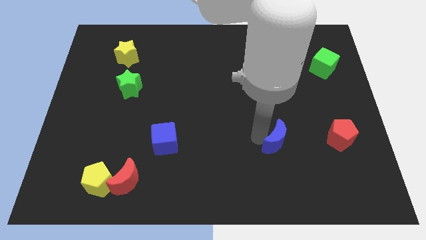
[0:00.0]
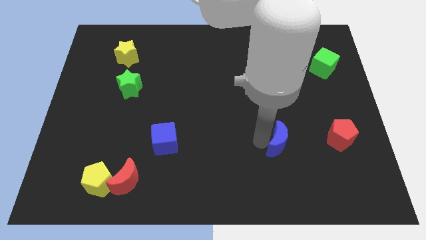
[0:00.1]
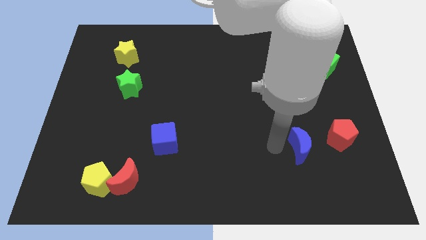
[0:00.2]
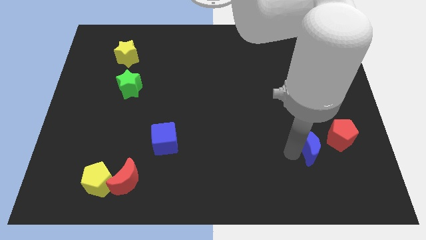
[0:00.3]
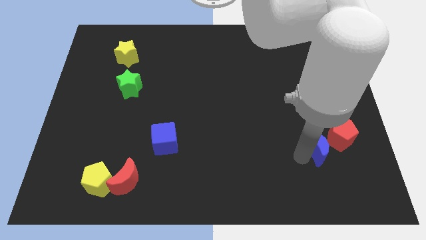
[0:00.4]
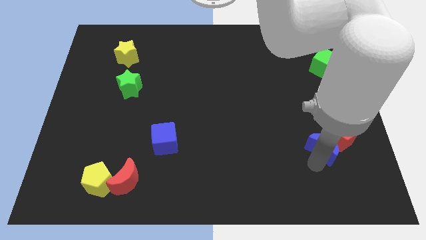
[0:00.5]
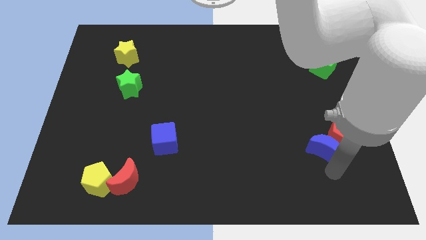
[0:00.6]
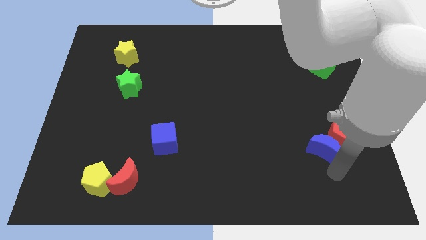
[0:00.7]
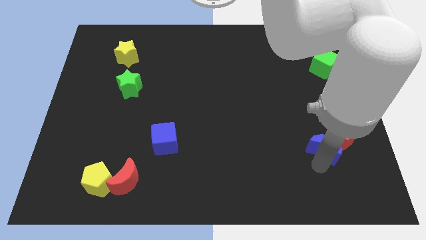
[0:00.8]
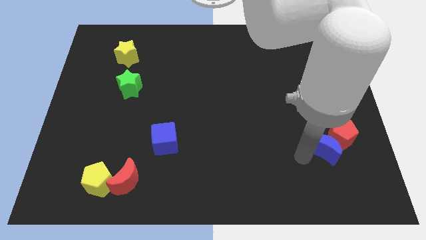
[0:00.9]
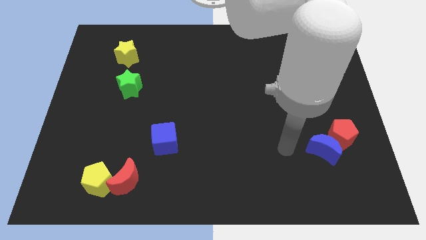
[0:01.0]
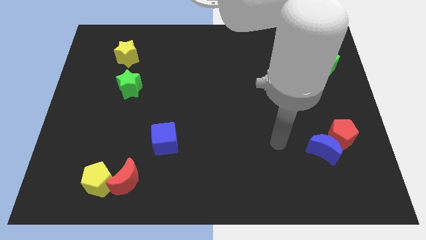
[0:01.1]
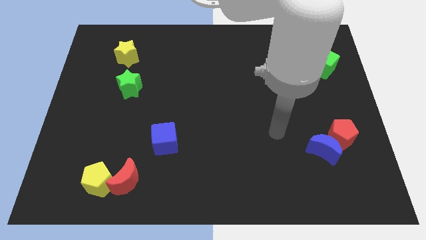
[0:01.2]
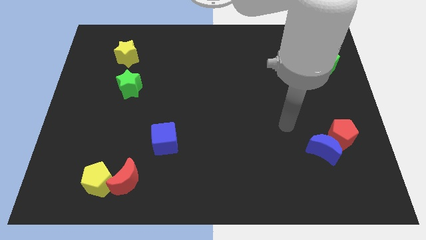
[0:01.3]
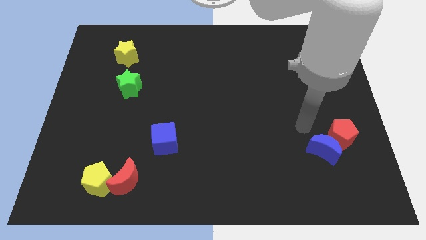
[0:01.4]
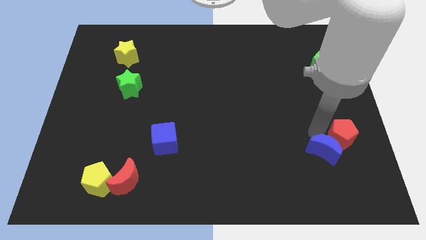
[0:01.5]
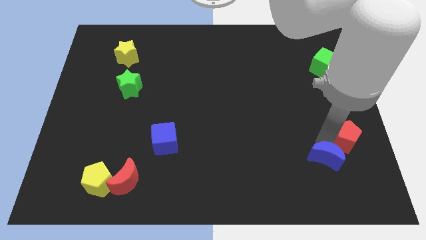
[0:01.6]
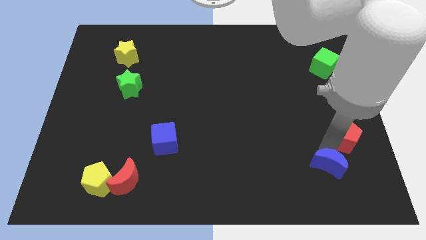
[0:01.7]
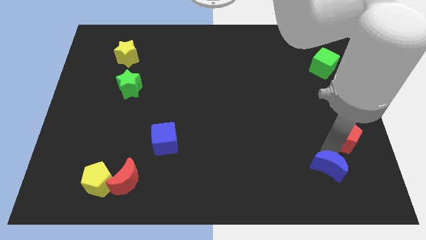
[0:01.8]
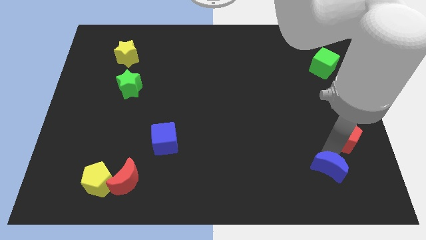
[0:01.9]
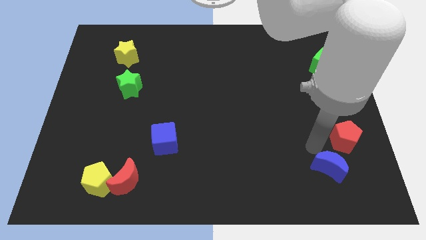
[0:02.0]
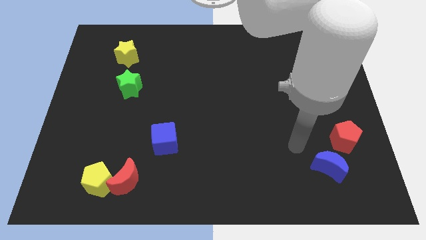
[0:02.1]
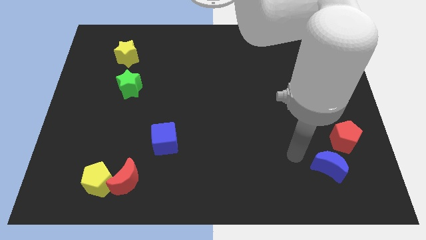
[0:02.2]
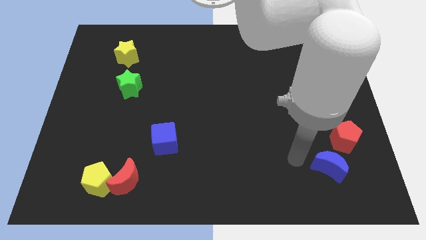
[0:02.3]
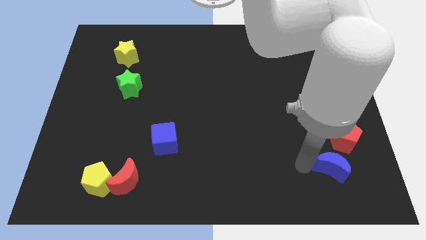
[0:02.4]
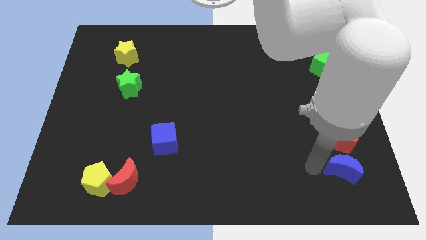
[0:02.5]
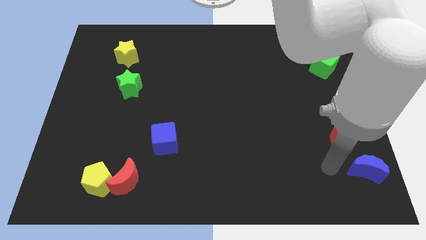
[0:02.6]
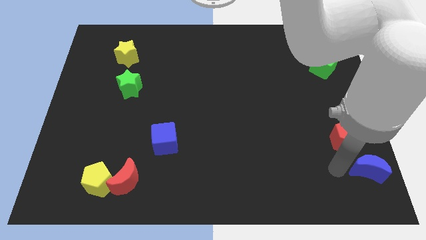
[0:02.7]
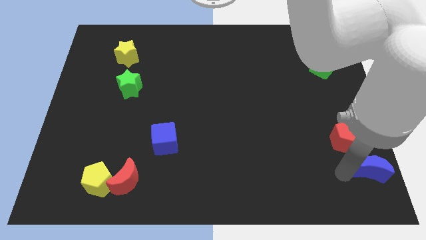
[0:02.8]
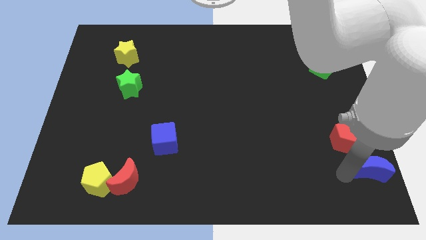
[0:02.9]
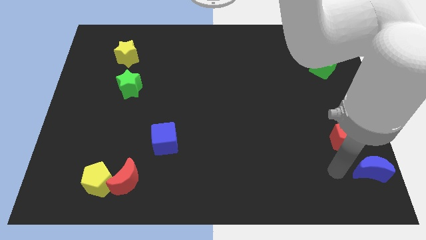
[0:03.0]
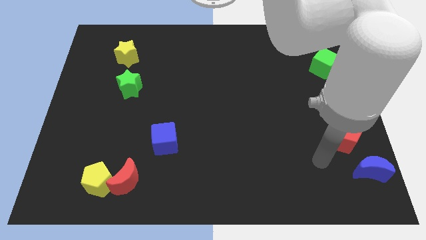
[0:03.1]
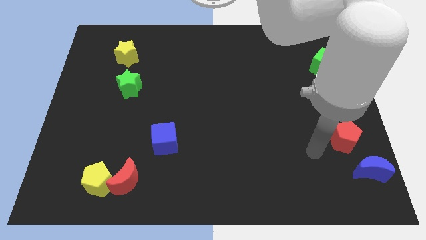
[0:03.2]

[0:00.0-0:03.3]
push the blue crescent to the bottom right side of the red pentagon

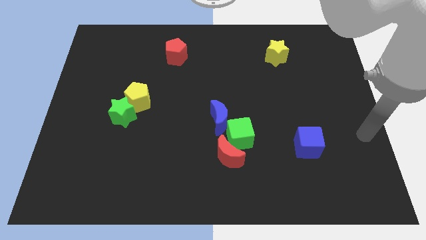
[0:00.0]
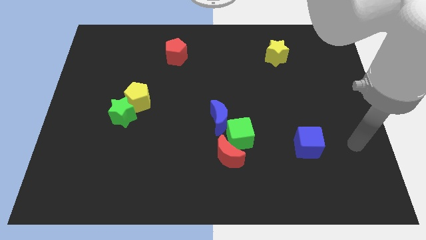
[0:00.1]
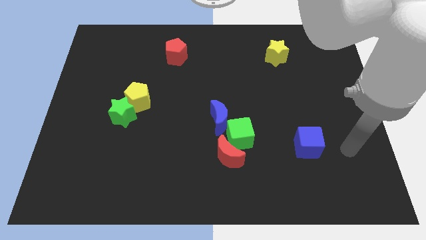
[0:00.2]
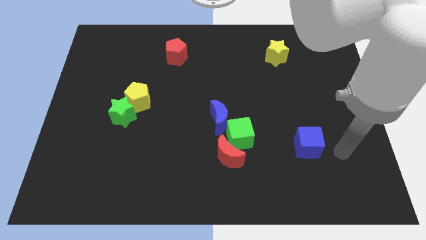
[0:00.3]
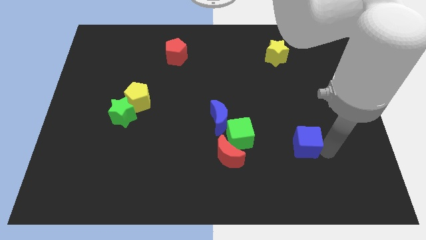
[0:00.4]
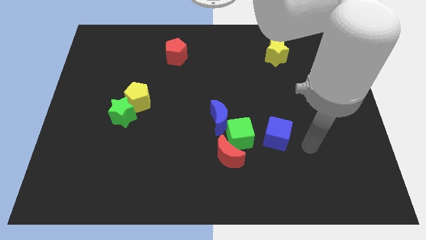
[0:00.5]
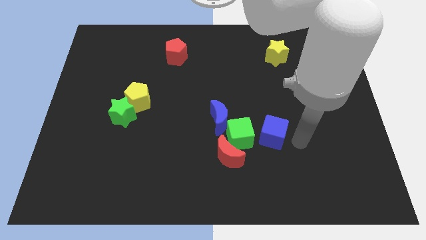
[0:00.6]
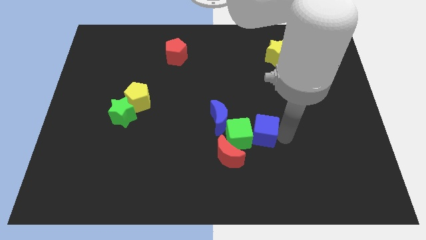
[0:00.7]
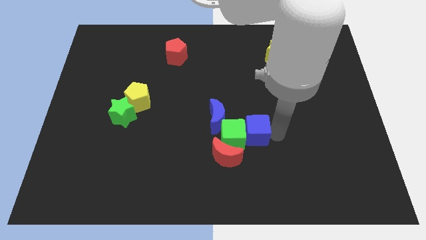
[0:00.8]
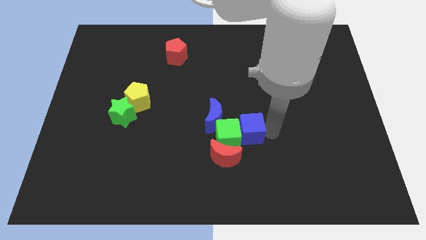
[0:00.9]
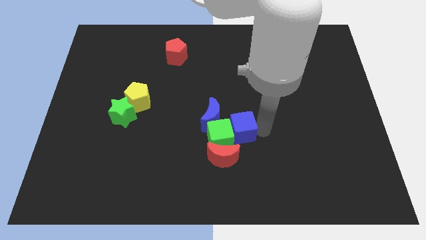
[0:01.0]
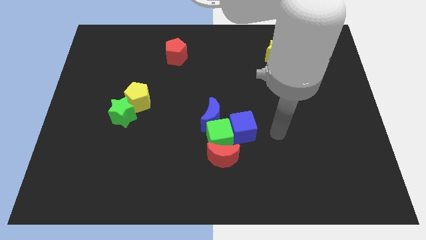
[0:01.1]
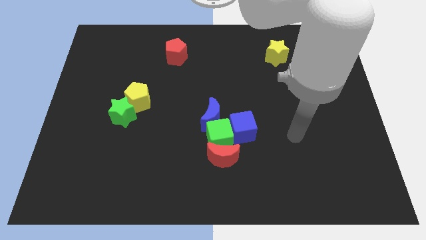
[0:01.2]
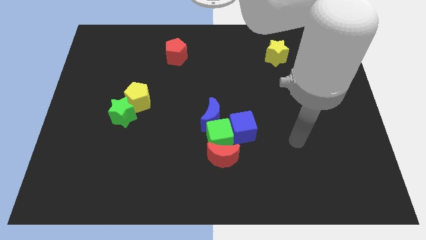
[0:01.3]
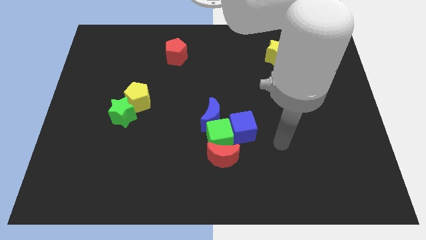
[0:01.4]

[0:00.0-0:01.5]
push the blue cube into the green cube

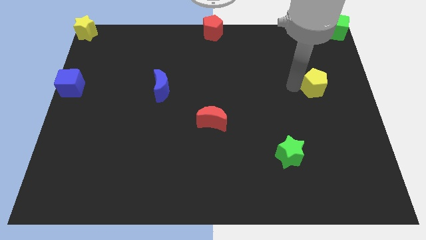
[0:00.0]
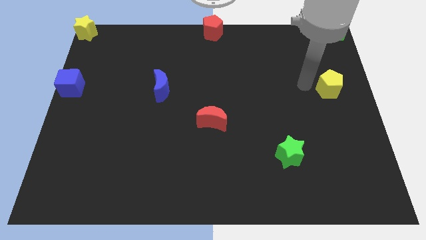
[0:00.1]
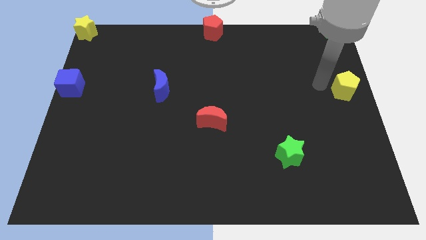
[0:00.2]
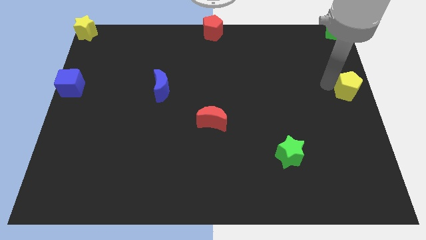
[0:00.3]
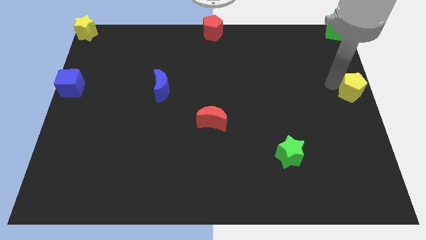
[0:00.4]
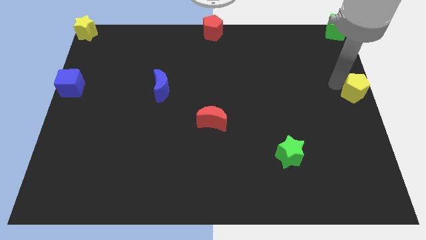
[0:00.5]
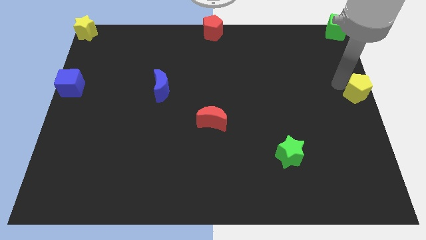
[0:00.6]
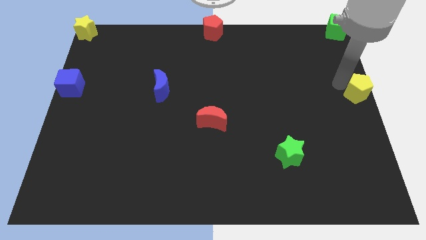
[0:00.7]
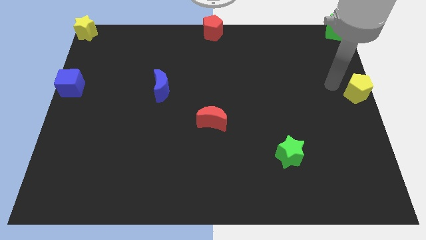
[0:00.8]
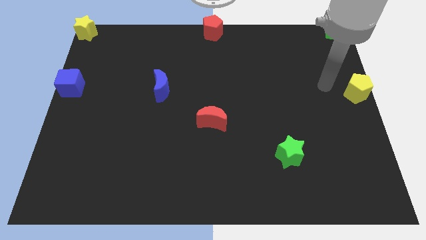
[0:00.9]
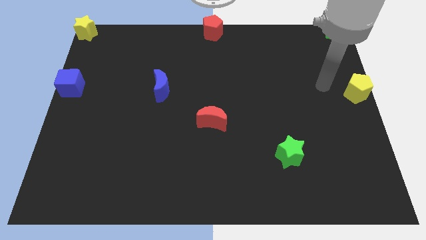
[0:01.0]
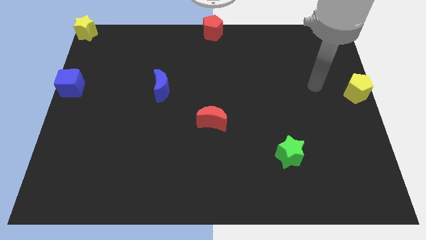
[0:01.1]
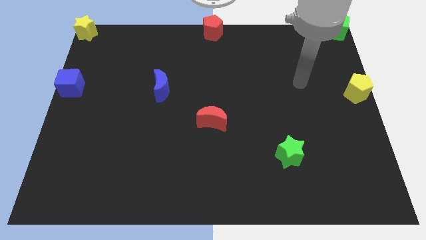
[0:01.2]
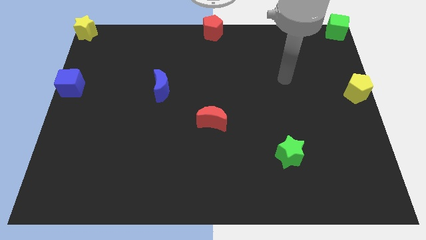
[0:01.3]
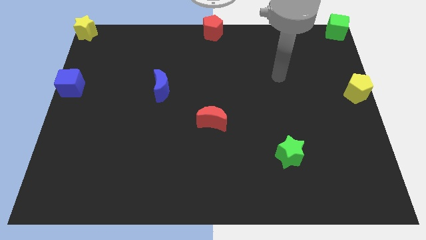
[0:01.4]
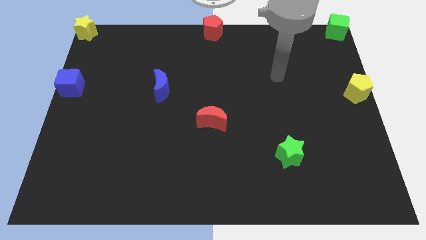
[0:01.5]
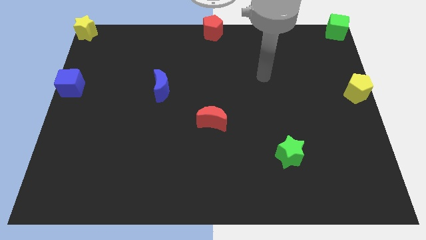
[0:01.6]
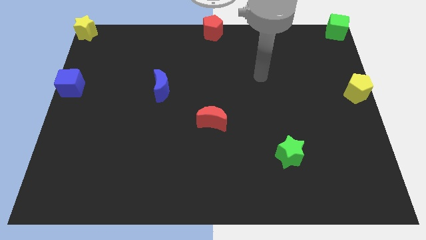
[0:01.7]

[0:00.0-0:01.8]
place the yellow pentagon at the center right side of the board

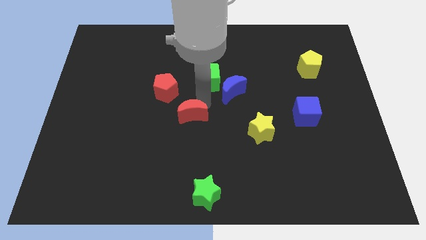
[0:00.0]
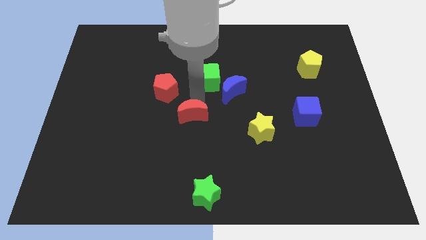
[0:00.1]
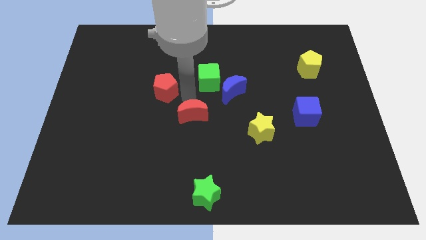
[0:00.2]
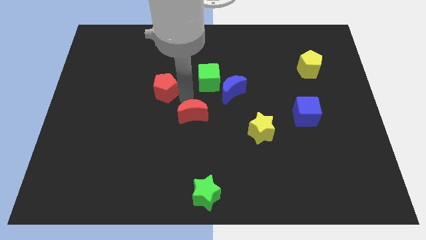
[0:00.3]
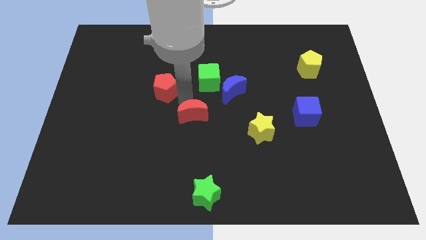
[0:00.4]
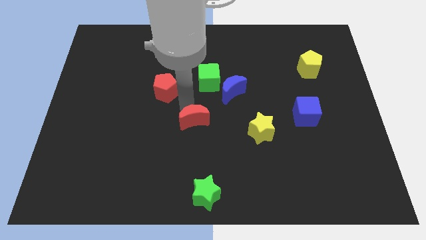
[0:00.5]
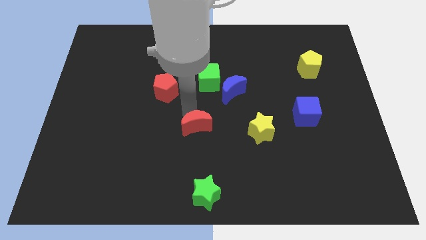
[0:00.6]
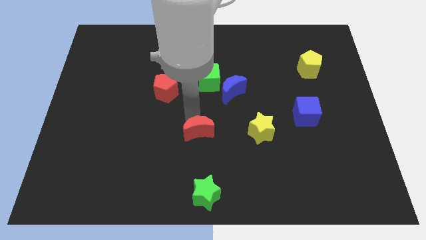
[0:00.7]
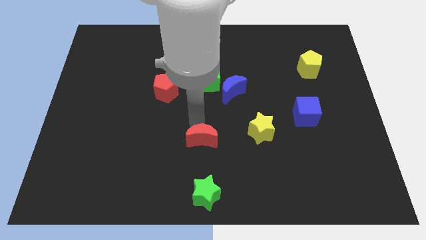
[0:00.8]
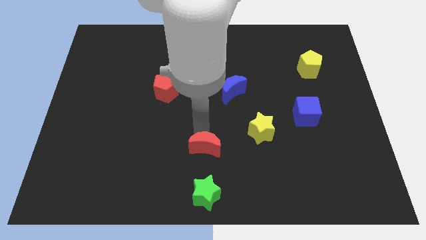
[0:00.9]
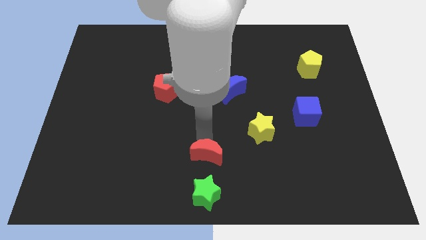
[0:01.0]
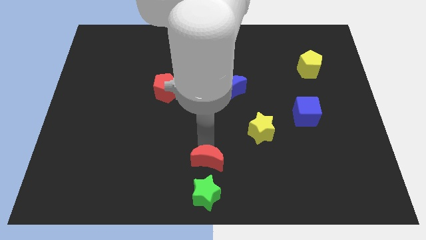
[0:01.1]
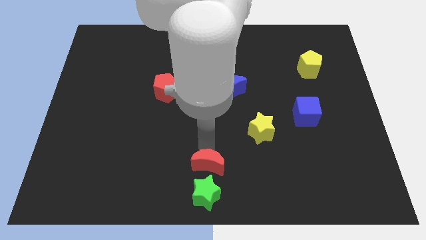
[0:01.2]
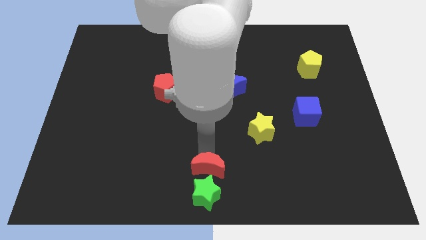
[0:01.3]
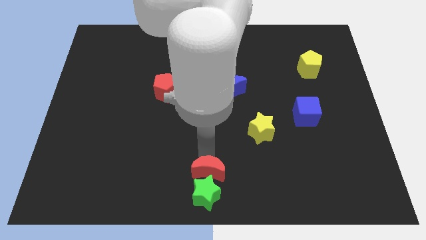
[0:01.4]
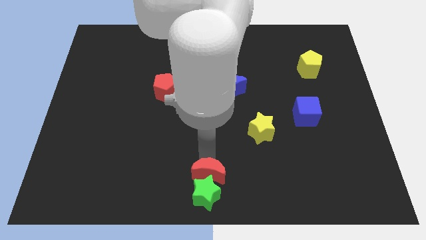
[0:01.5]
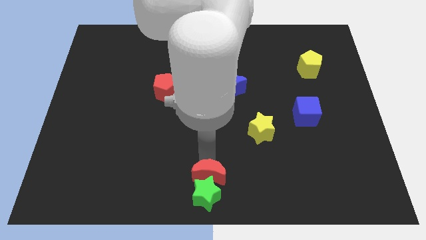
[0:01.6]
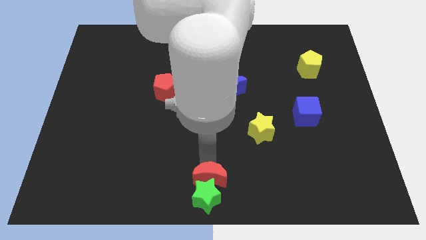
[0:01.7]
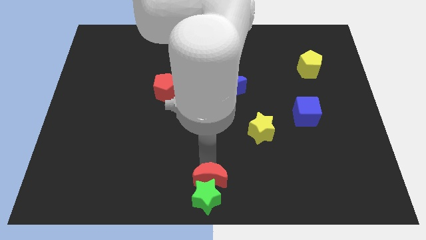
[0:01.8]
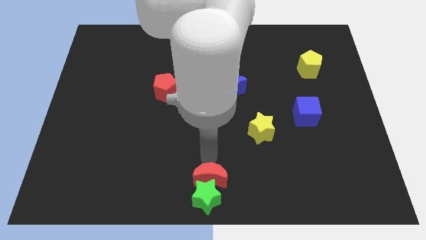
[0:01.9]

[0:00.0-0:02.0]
push the red crescent into the green star

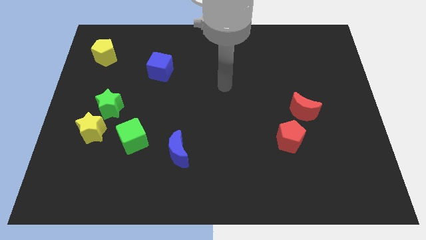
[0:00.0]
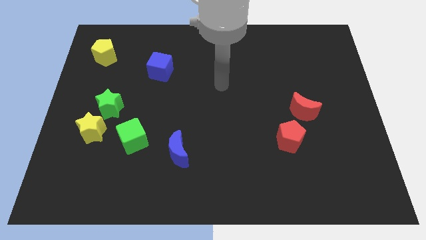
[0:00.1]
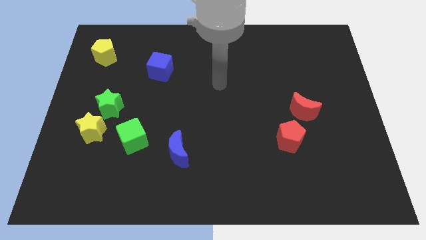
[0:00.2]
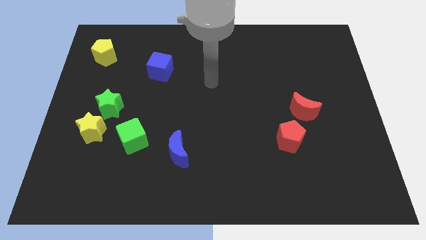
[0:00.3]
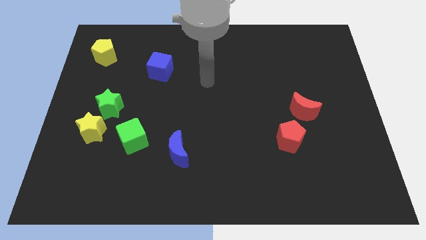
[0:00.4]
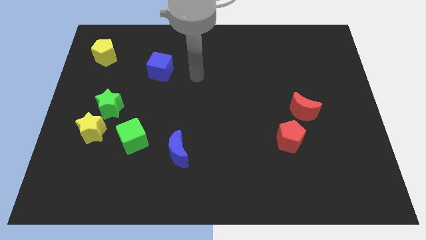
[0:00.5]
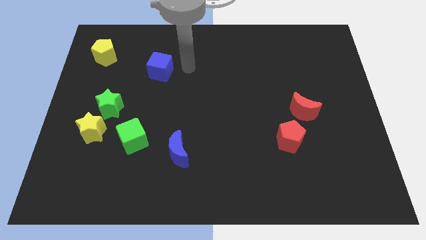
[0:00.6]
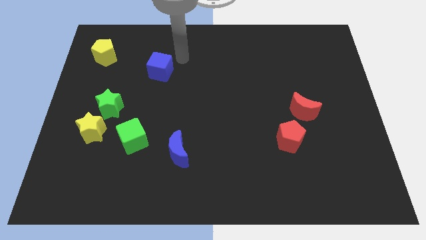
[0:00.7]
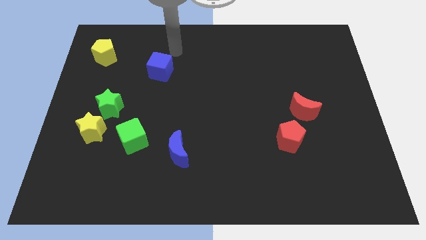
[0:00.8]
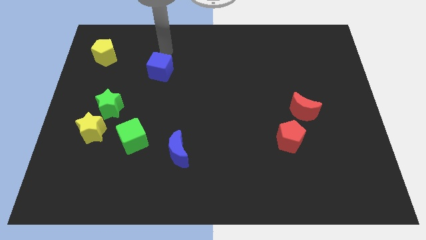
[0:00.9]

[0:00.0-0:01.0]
go near the blue cube
